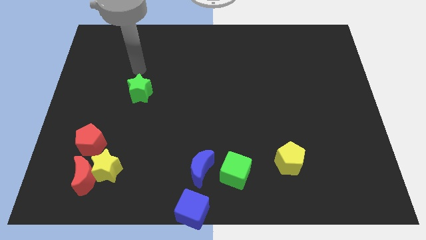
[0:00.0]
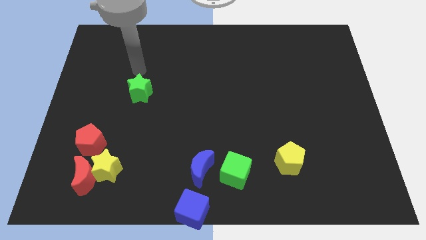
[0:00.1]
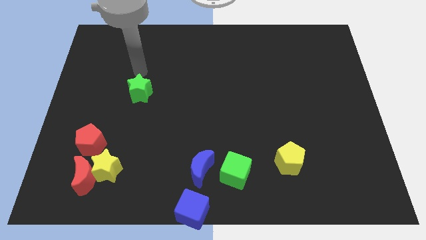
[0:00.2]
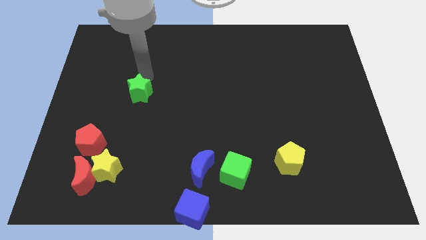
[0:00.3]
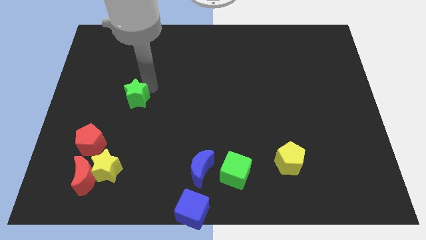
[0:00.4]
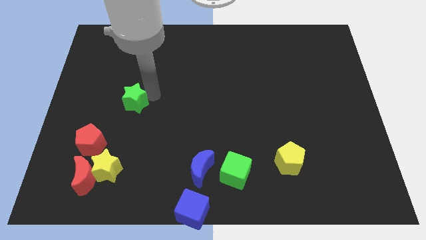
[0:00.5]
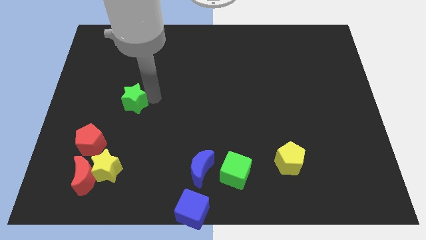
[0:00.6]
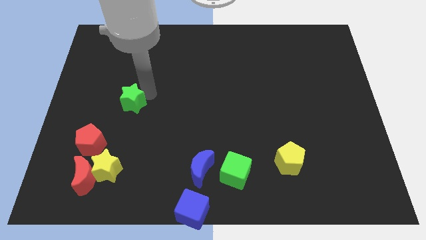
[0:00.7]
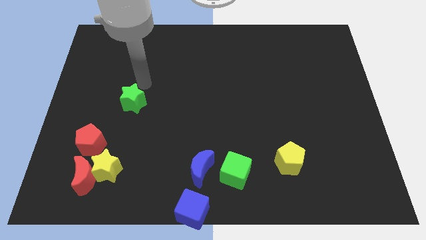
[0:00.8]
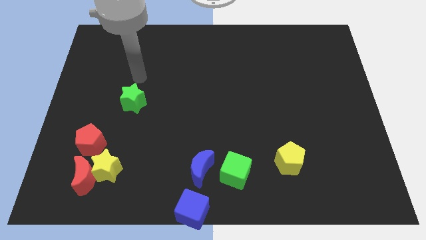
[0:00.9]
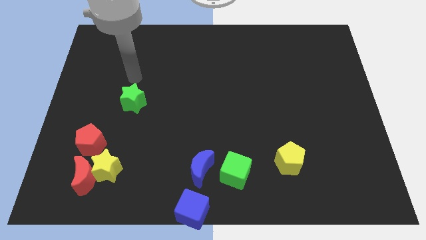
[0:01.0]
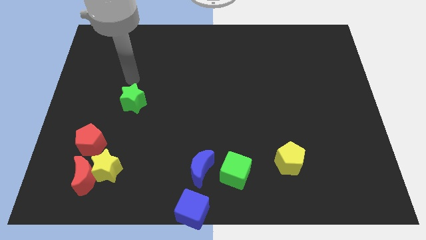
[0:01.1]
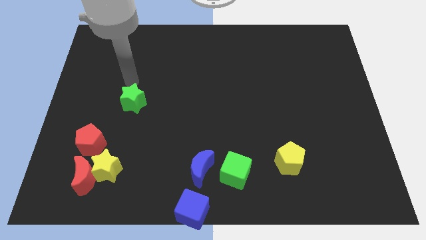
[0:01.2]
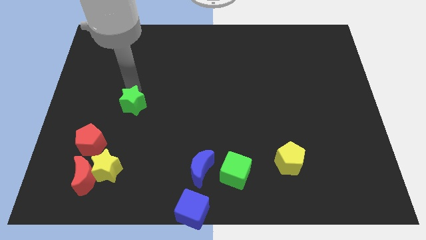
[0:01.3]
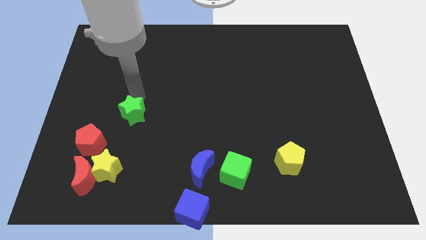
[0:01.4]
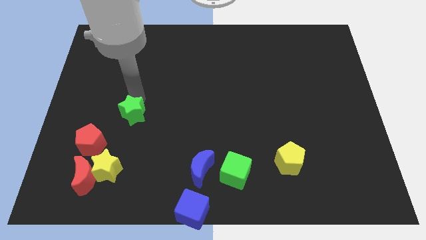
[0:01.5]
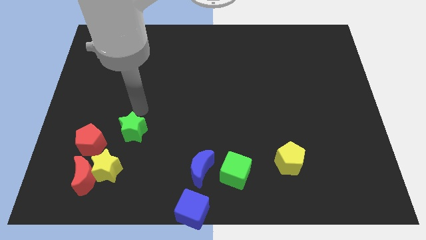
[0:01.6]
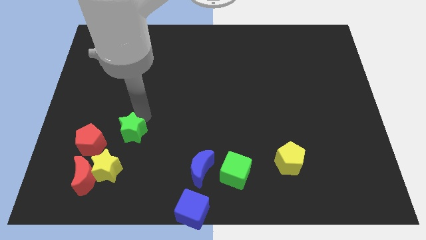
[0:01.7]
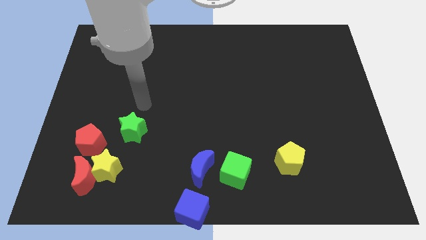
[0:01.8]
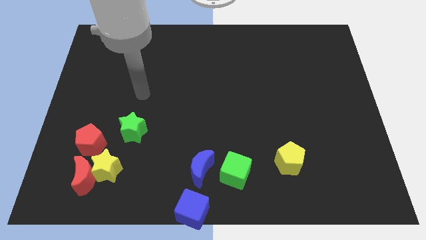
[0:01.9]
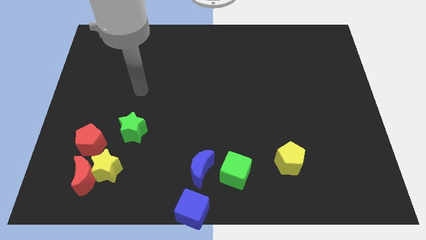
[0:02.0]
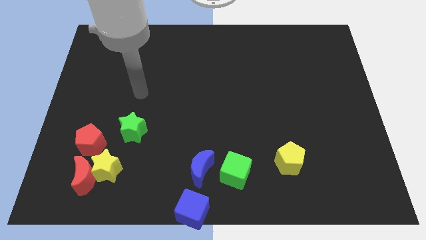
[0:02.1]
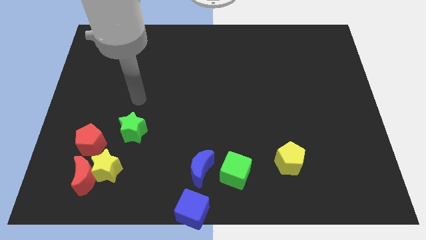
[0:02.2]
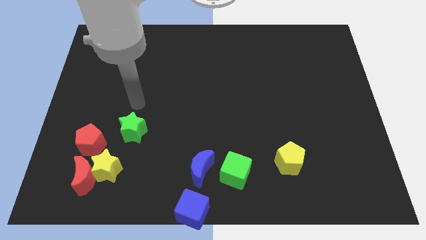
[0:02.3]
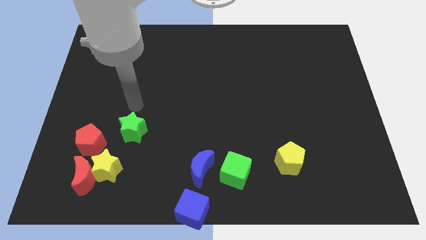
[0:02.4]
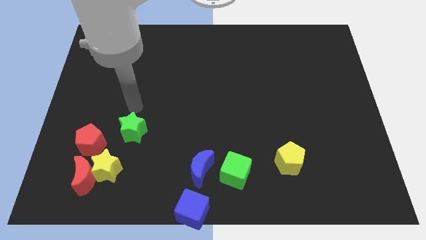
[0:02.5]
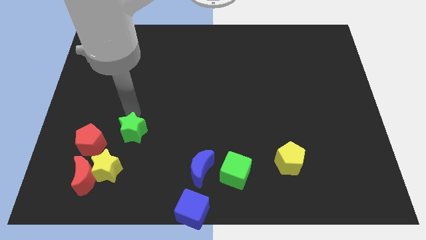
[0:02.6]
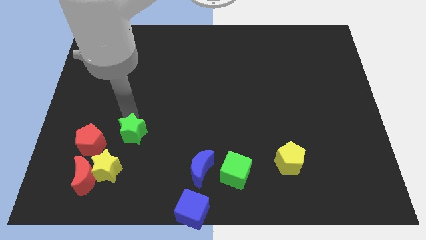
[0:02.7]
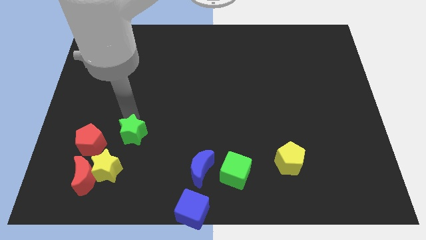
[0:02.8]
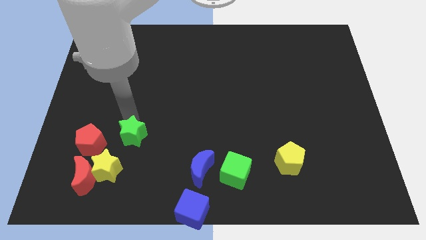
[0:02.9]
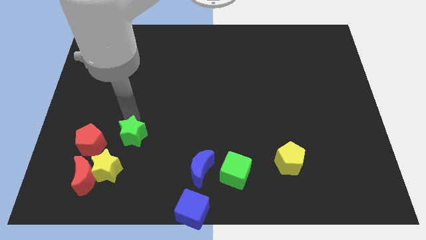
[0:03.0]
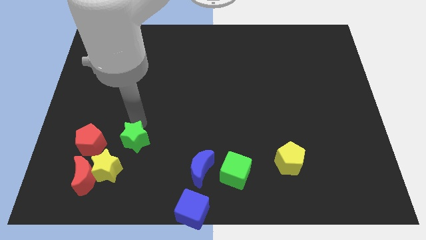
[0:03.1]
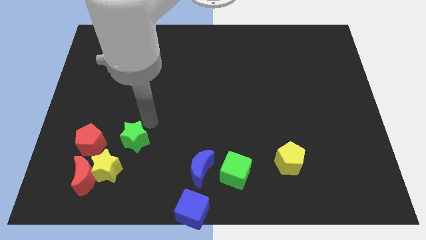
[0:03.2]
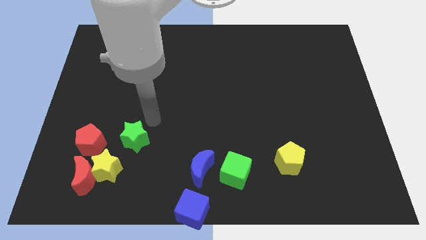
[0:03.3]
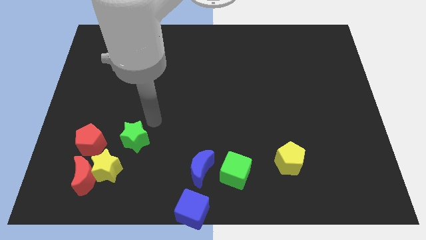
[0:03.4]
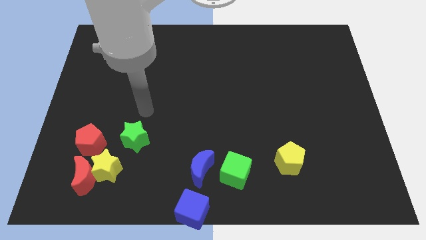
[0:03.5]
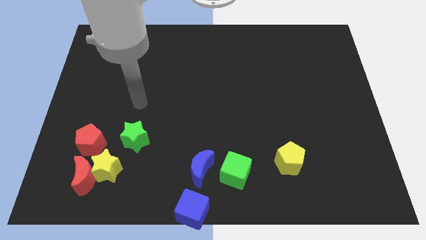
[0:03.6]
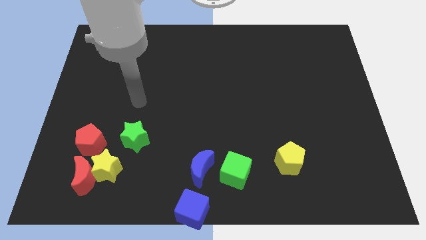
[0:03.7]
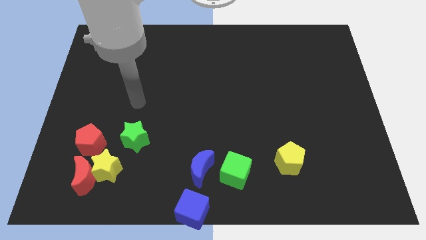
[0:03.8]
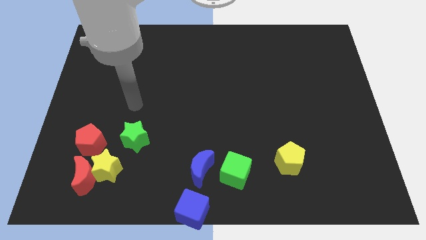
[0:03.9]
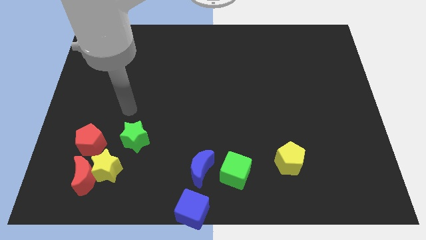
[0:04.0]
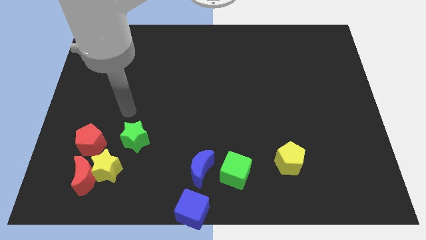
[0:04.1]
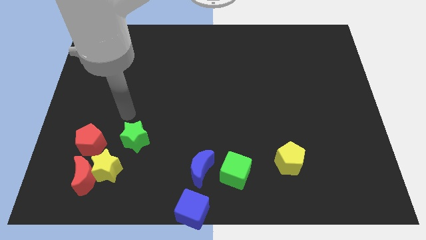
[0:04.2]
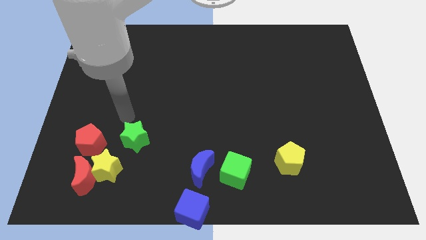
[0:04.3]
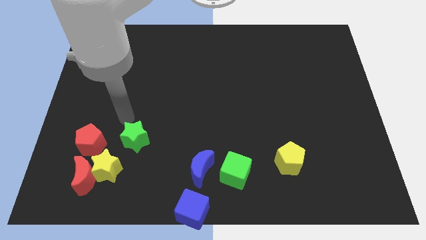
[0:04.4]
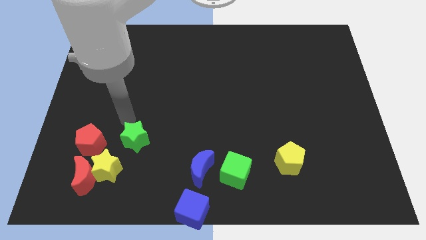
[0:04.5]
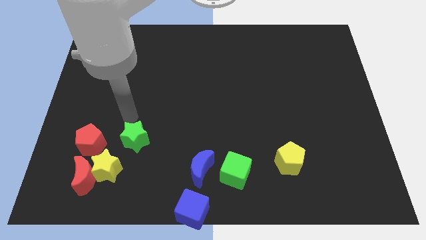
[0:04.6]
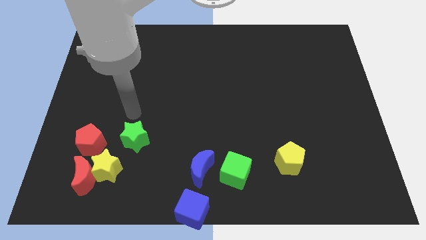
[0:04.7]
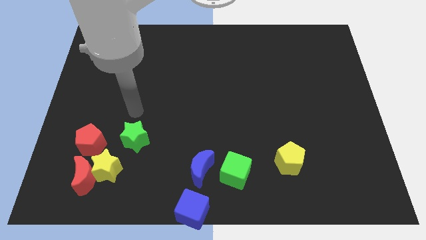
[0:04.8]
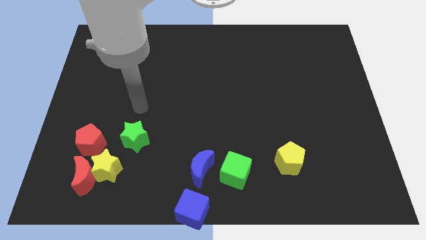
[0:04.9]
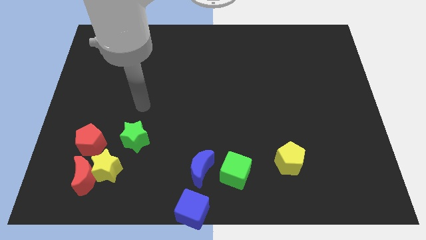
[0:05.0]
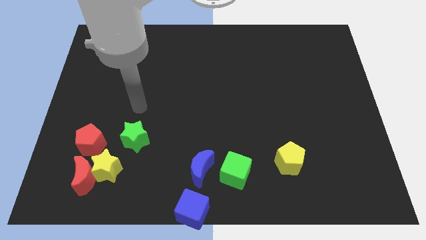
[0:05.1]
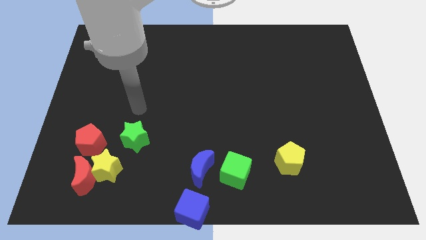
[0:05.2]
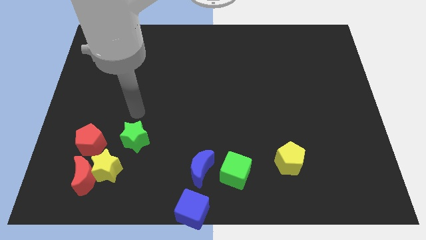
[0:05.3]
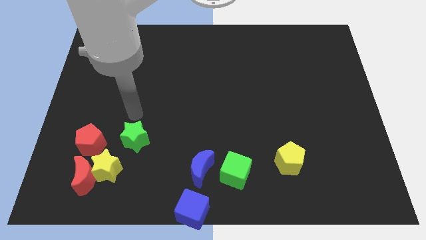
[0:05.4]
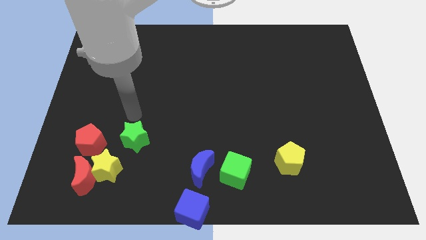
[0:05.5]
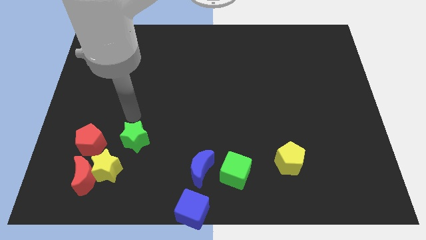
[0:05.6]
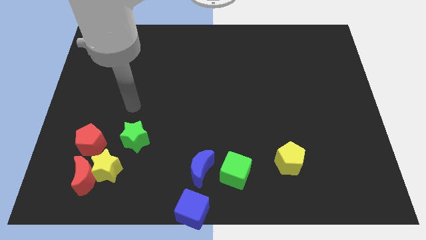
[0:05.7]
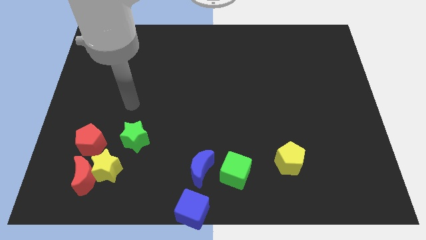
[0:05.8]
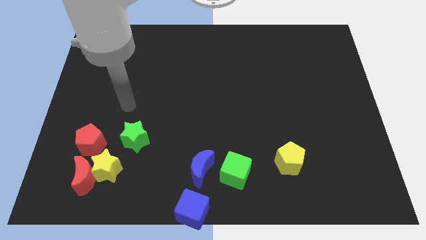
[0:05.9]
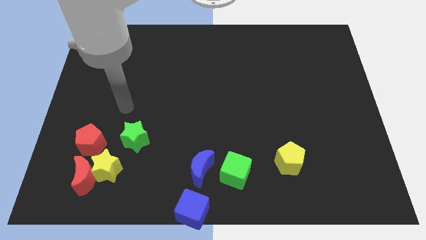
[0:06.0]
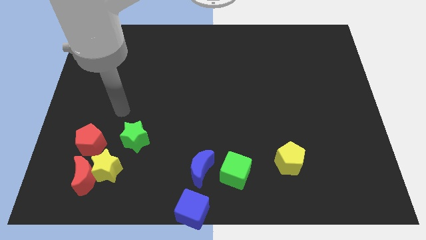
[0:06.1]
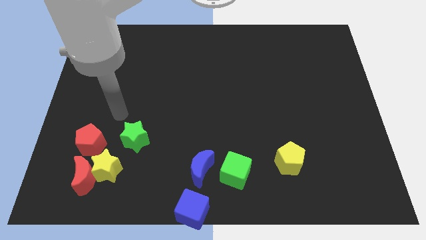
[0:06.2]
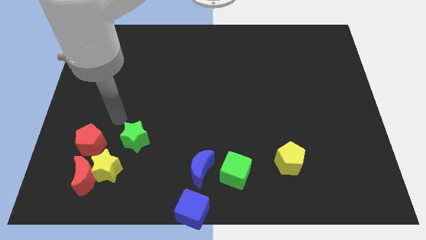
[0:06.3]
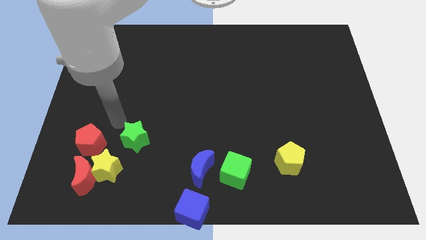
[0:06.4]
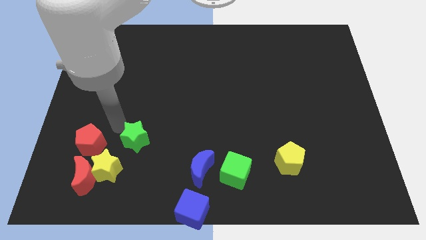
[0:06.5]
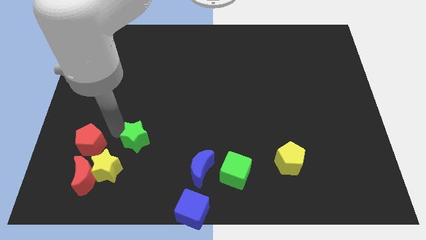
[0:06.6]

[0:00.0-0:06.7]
push the green star right to the red pentagon

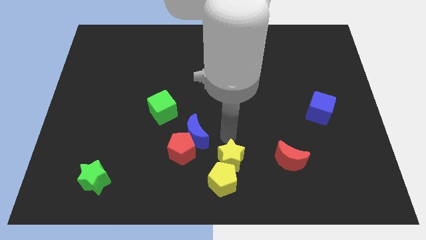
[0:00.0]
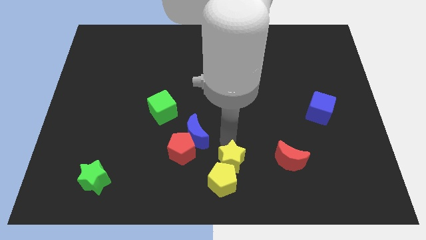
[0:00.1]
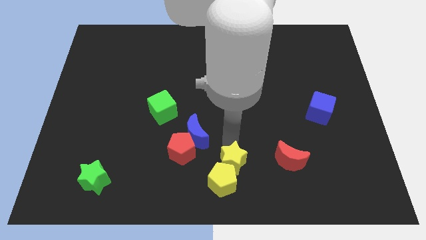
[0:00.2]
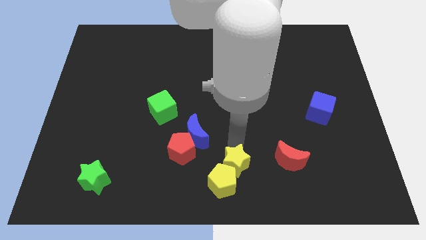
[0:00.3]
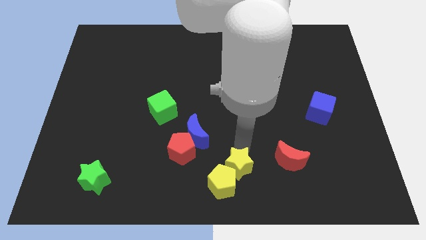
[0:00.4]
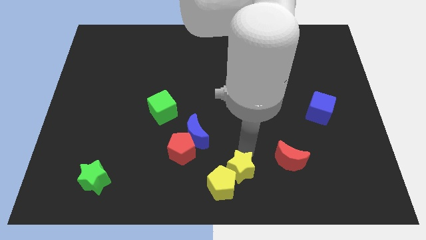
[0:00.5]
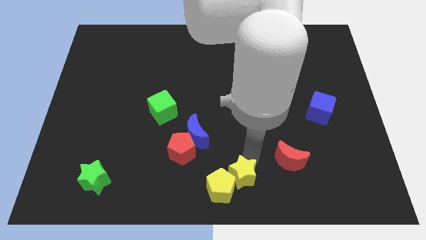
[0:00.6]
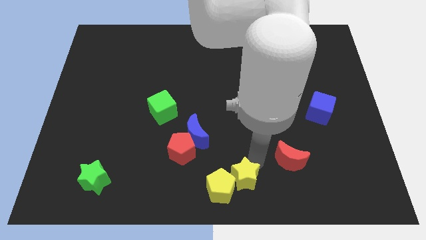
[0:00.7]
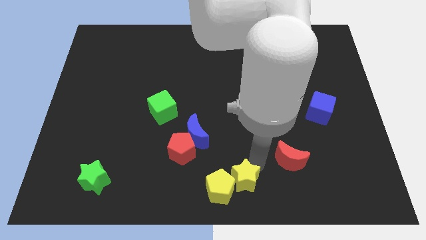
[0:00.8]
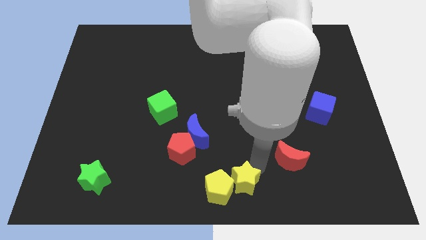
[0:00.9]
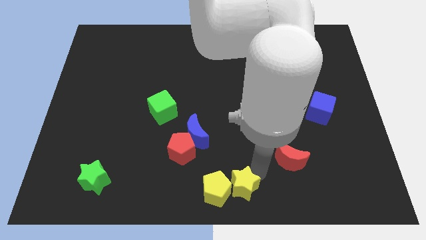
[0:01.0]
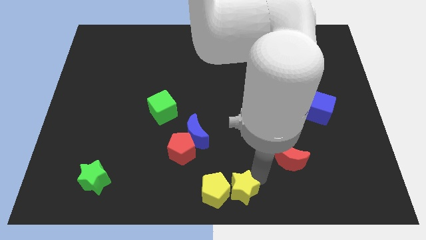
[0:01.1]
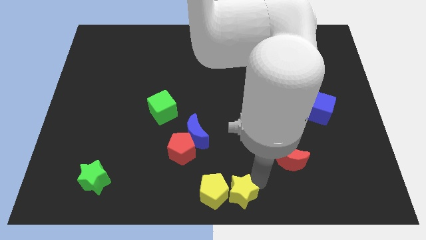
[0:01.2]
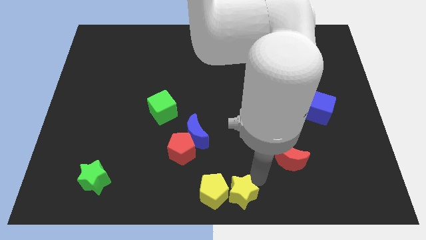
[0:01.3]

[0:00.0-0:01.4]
place the yellow star right to the yellow pentagon

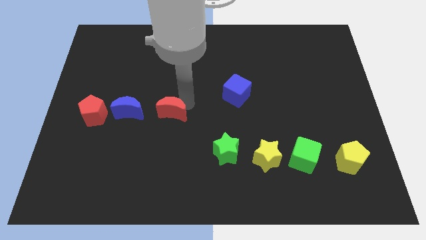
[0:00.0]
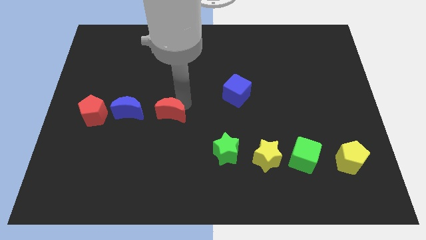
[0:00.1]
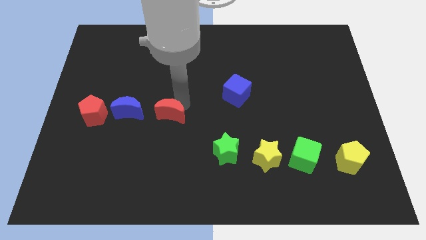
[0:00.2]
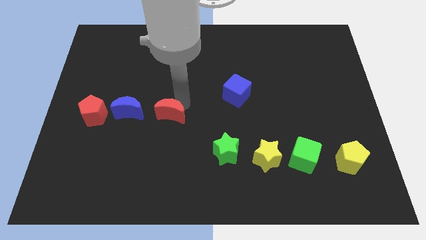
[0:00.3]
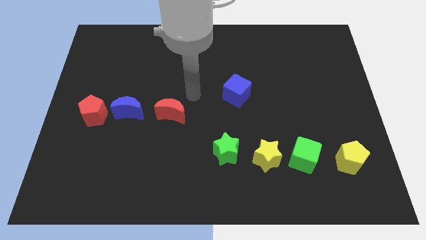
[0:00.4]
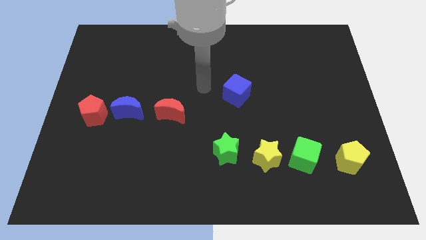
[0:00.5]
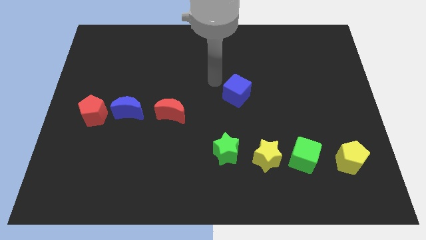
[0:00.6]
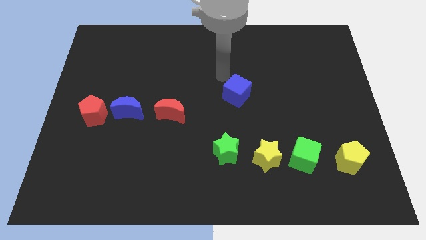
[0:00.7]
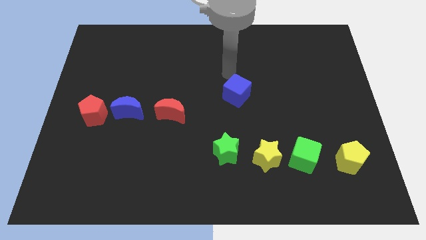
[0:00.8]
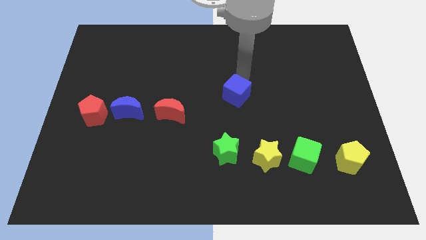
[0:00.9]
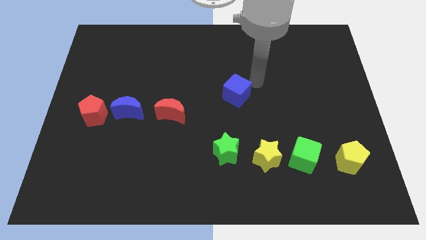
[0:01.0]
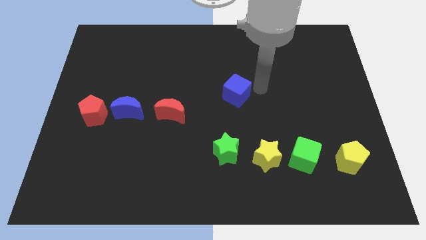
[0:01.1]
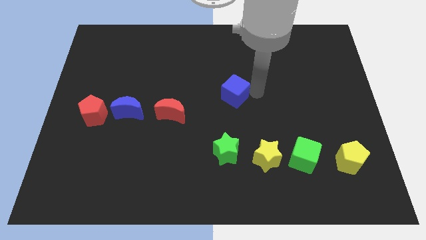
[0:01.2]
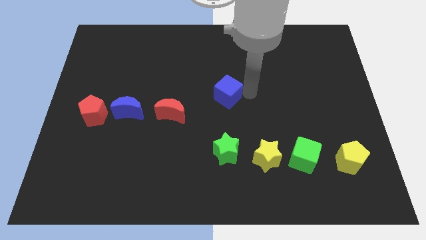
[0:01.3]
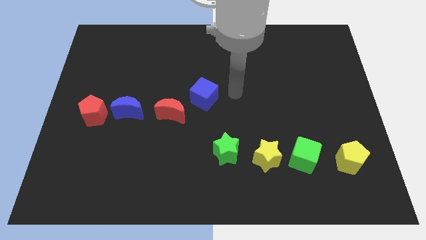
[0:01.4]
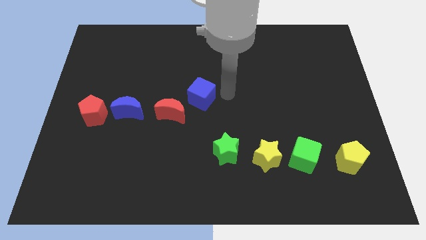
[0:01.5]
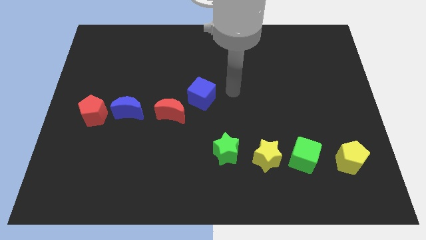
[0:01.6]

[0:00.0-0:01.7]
move the blue cube vertically to the top of the green star
